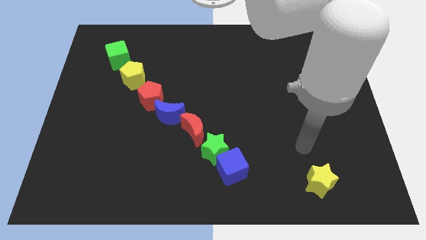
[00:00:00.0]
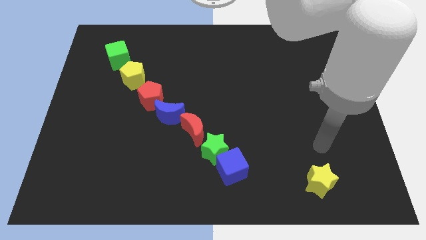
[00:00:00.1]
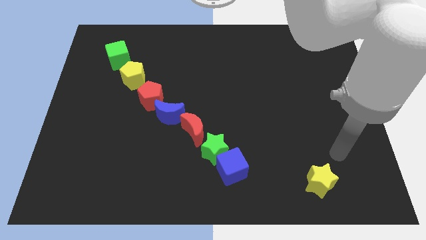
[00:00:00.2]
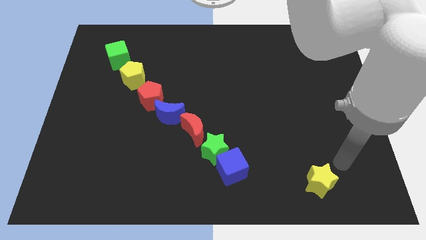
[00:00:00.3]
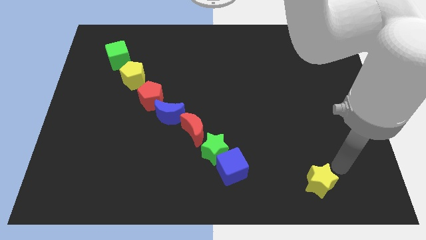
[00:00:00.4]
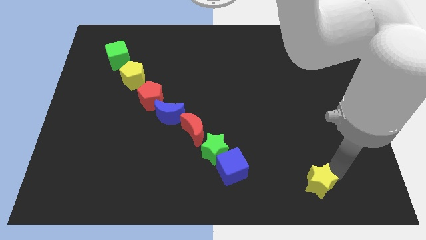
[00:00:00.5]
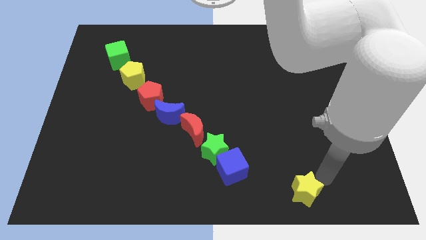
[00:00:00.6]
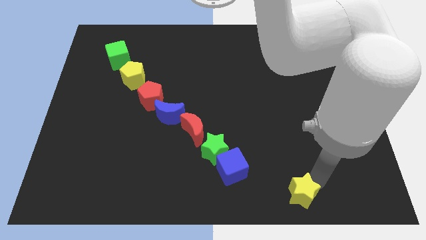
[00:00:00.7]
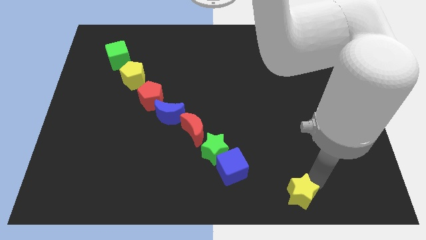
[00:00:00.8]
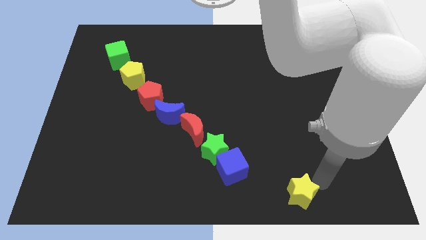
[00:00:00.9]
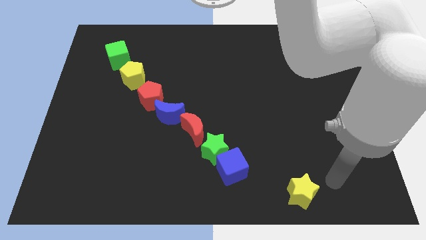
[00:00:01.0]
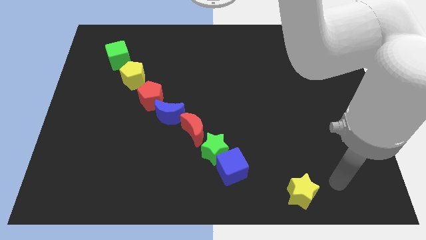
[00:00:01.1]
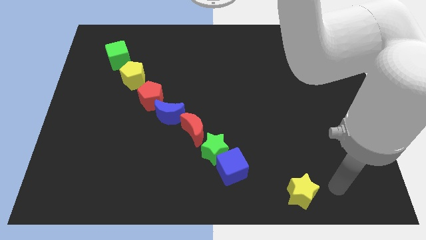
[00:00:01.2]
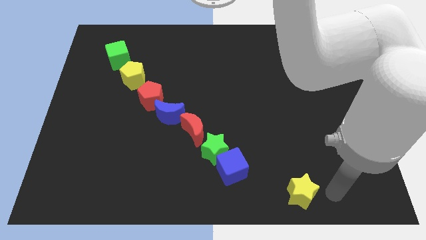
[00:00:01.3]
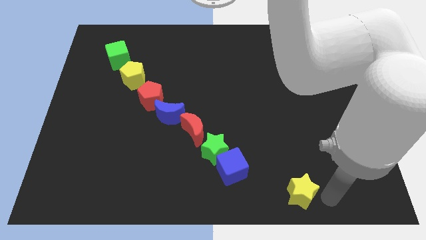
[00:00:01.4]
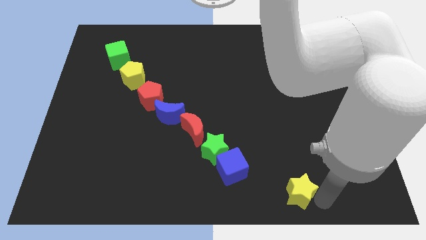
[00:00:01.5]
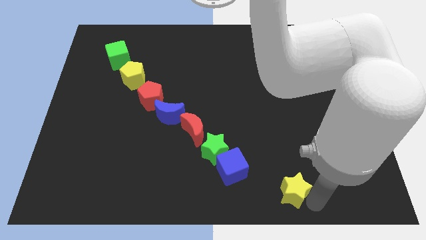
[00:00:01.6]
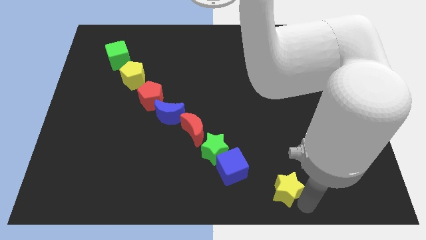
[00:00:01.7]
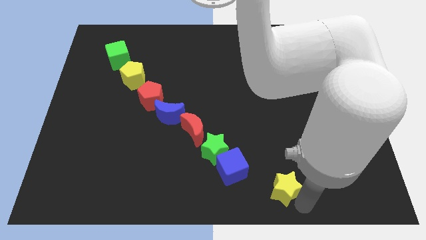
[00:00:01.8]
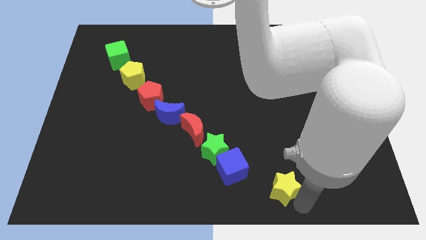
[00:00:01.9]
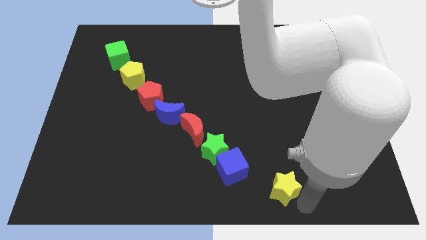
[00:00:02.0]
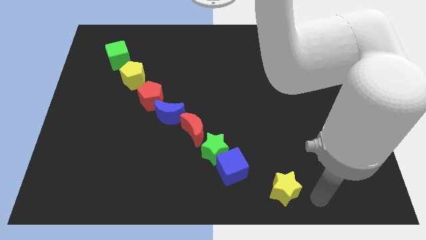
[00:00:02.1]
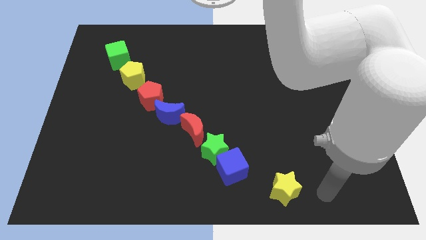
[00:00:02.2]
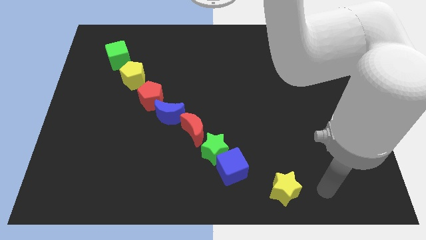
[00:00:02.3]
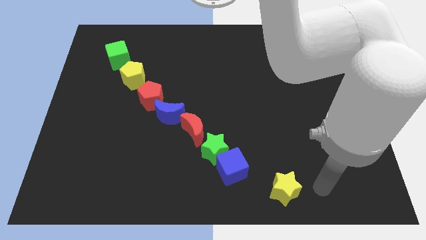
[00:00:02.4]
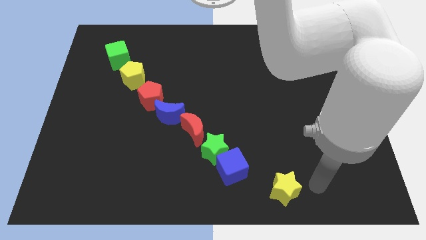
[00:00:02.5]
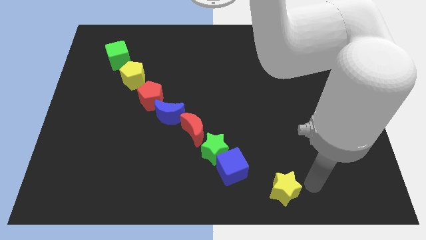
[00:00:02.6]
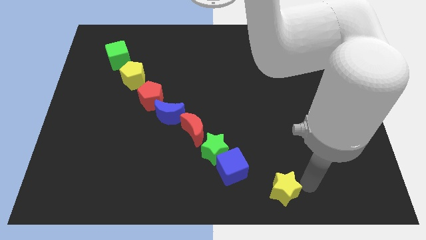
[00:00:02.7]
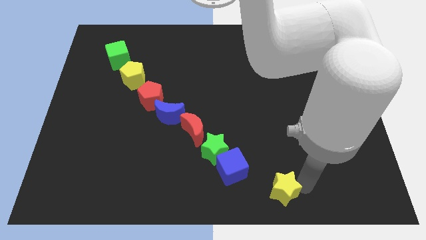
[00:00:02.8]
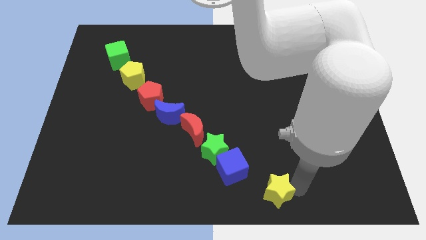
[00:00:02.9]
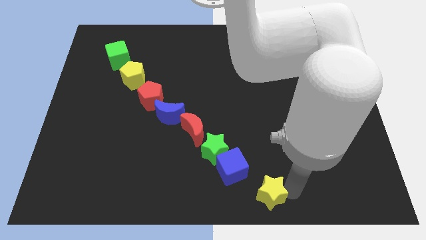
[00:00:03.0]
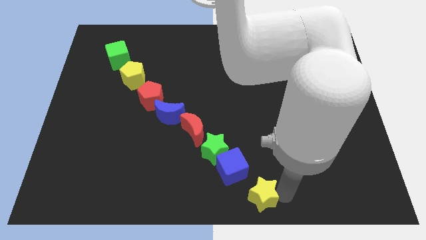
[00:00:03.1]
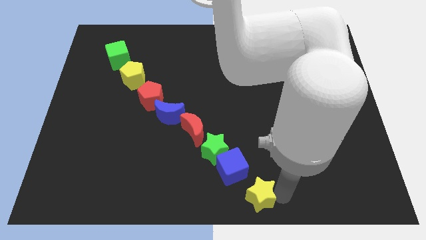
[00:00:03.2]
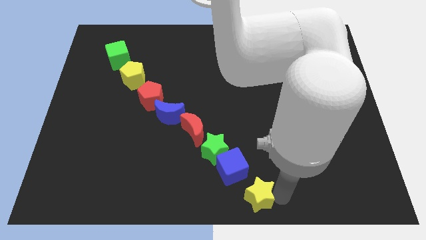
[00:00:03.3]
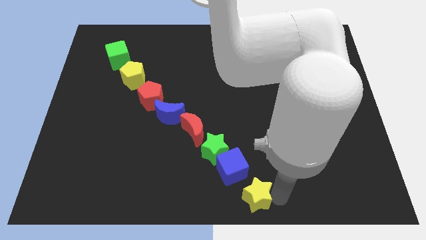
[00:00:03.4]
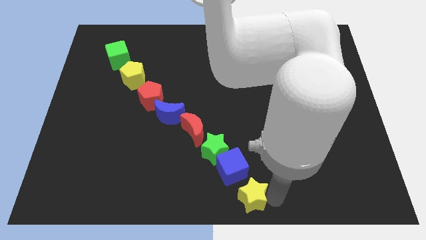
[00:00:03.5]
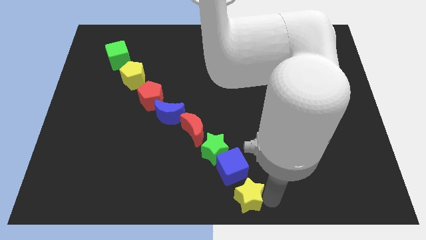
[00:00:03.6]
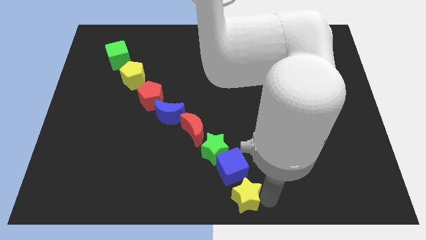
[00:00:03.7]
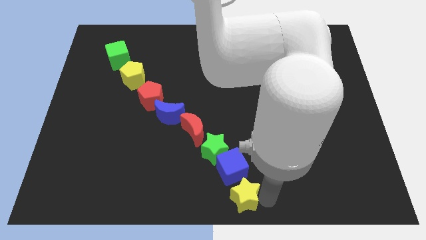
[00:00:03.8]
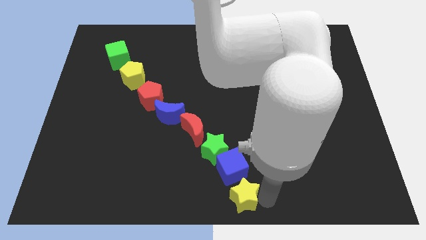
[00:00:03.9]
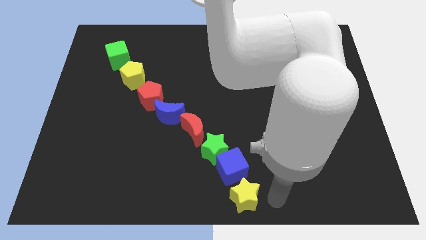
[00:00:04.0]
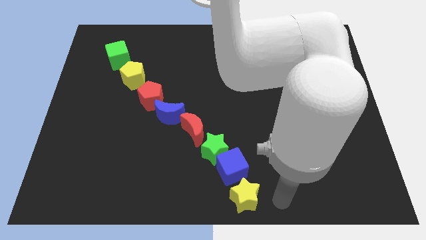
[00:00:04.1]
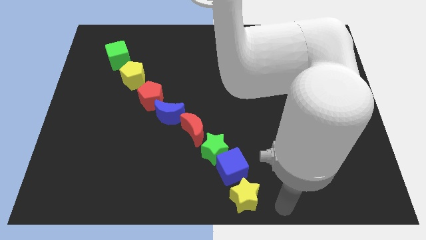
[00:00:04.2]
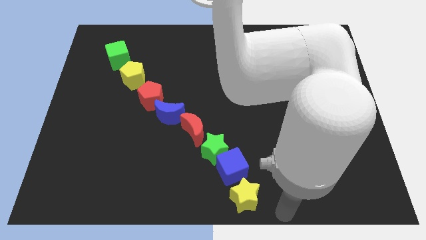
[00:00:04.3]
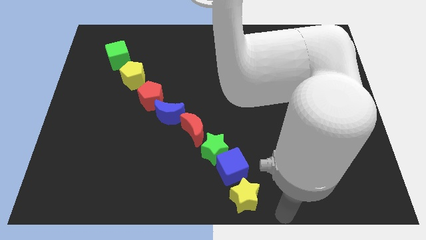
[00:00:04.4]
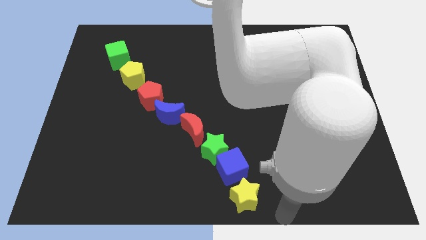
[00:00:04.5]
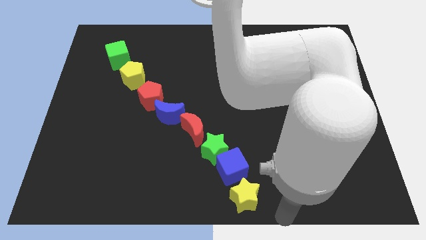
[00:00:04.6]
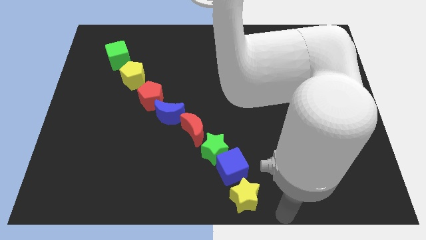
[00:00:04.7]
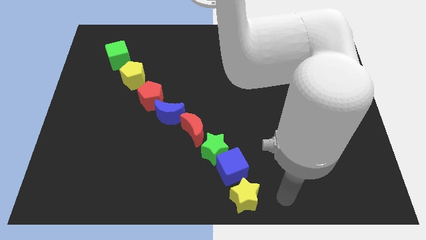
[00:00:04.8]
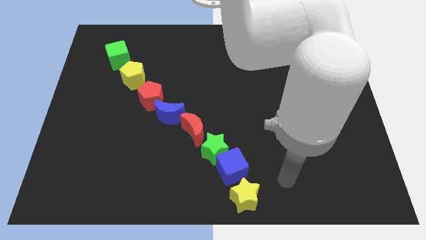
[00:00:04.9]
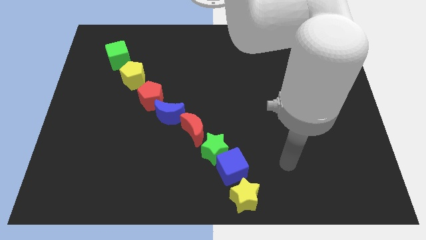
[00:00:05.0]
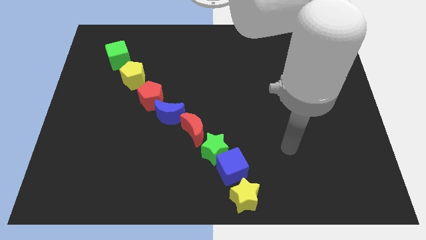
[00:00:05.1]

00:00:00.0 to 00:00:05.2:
move the yellow star to the bottom of the blue cube

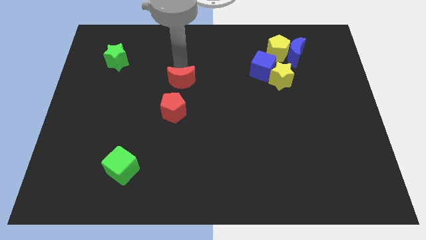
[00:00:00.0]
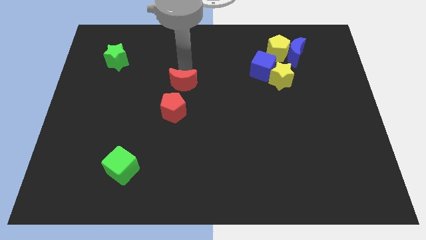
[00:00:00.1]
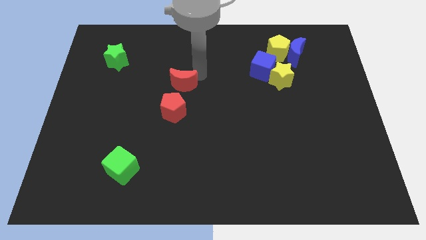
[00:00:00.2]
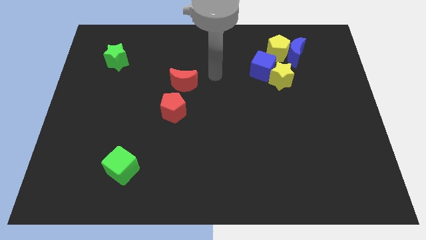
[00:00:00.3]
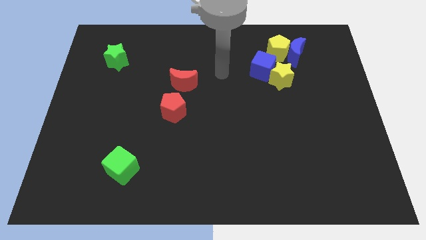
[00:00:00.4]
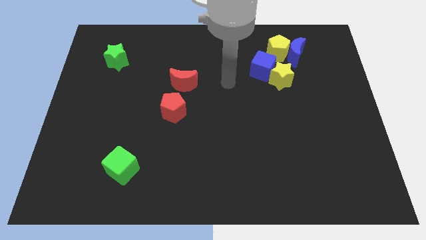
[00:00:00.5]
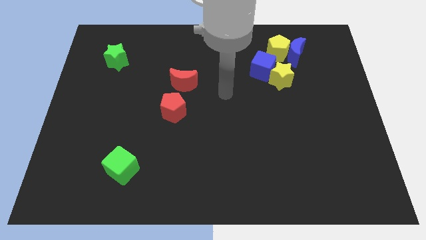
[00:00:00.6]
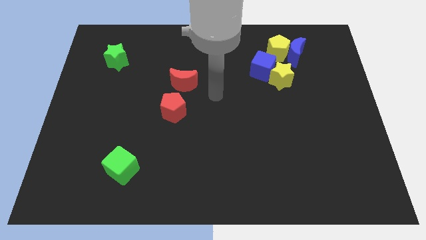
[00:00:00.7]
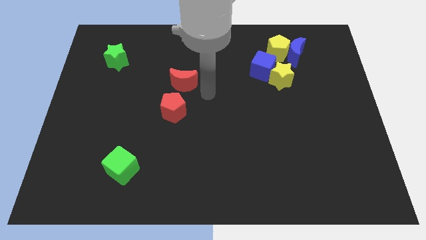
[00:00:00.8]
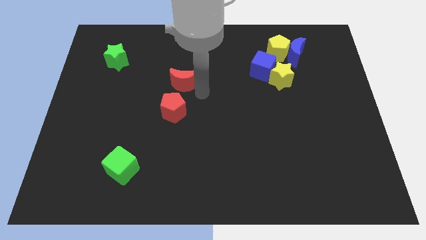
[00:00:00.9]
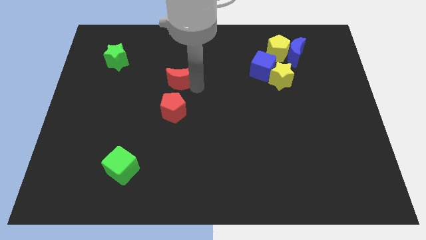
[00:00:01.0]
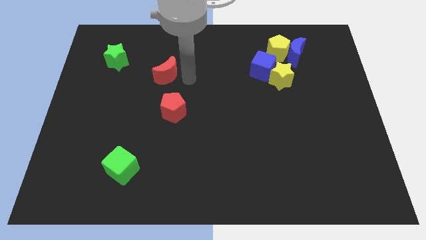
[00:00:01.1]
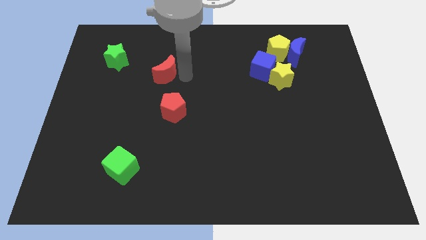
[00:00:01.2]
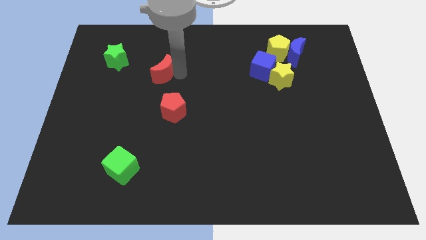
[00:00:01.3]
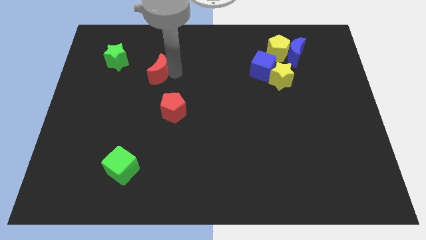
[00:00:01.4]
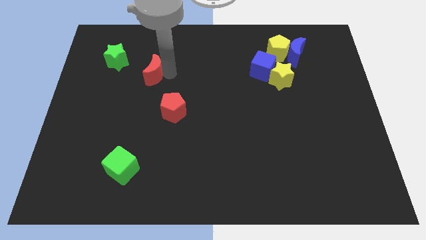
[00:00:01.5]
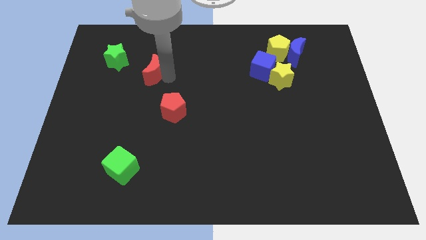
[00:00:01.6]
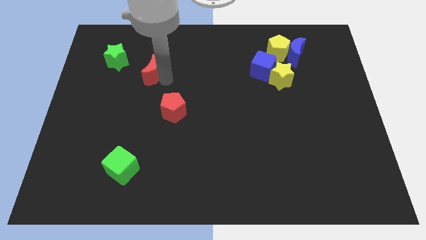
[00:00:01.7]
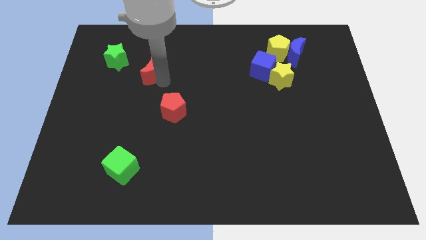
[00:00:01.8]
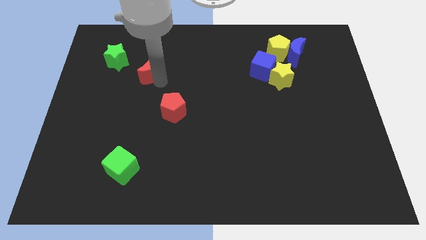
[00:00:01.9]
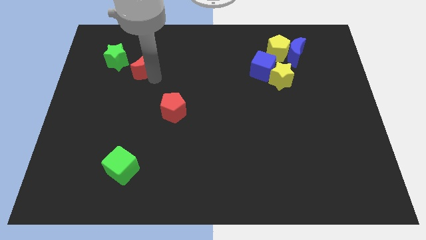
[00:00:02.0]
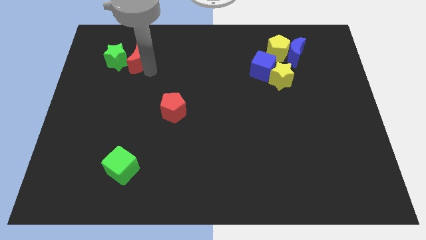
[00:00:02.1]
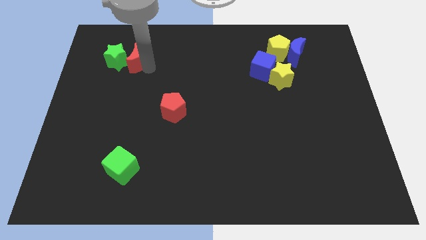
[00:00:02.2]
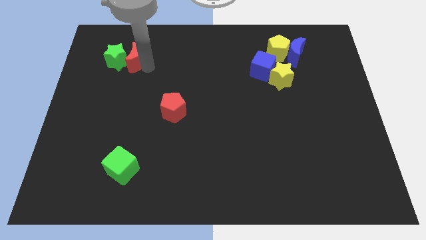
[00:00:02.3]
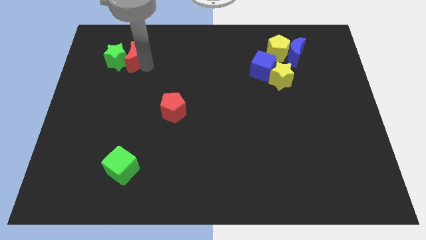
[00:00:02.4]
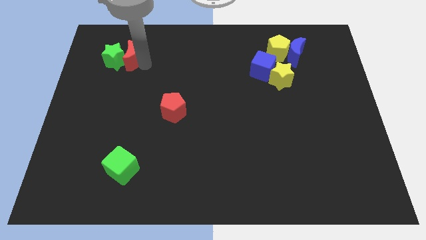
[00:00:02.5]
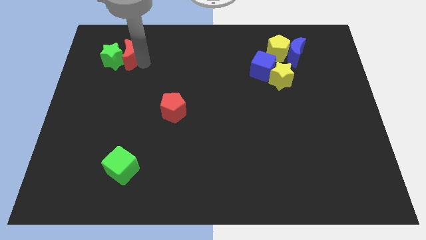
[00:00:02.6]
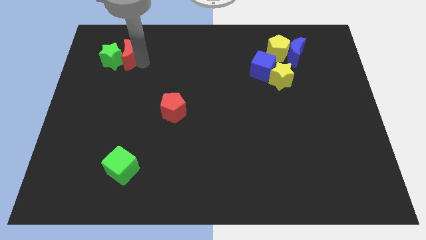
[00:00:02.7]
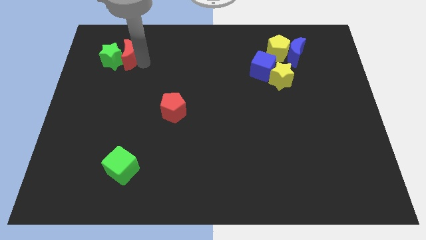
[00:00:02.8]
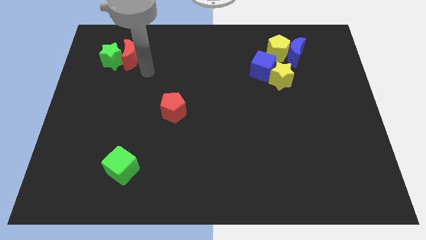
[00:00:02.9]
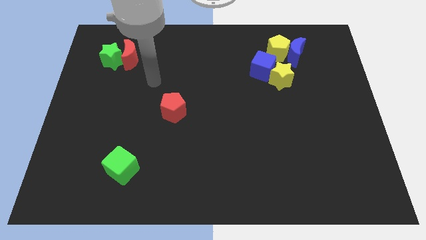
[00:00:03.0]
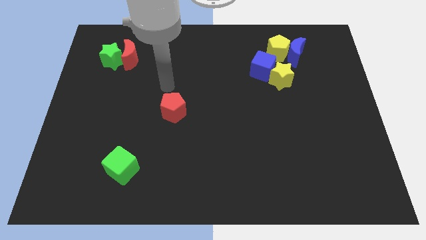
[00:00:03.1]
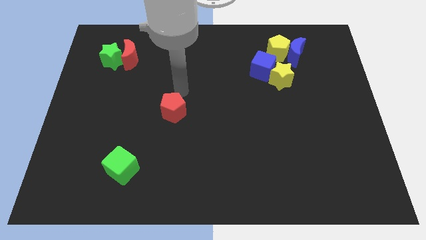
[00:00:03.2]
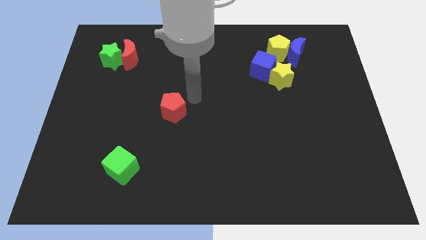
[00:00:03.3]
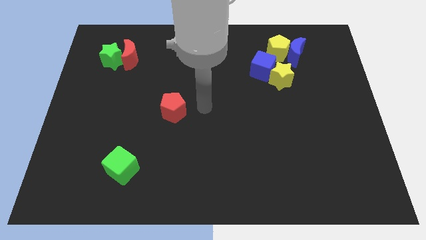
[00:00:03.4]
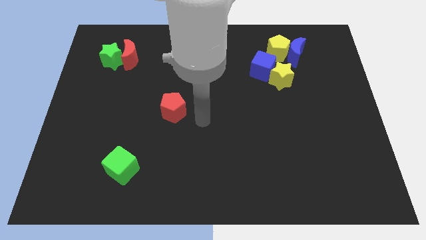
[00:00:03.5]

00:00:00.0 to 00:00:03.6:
push the red crescent to the right of the green star
